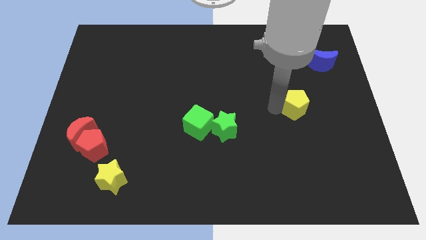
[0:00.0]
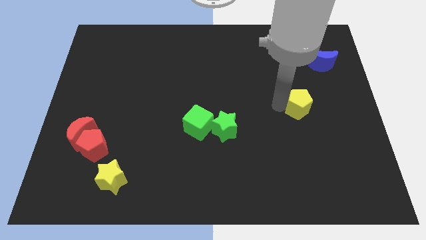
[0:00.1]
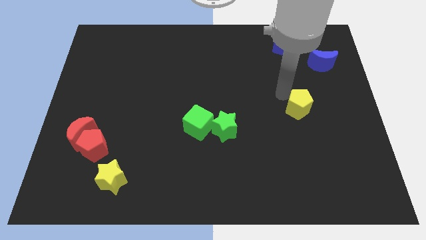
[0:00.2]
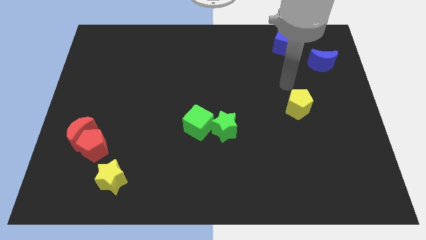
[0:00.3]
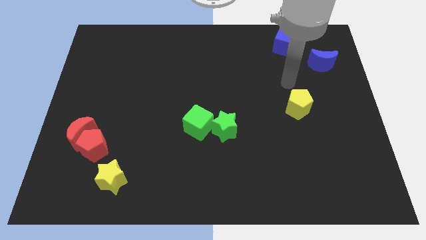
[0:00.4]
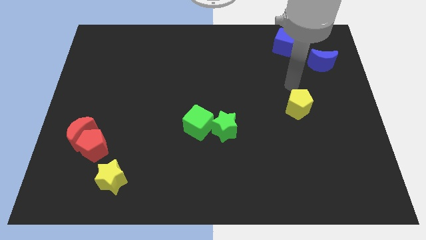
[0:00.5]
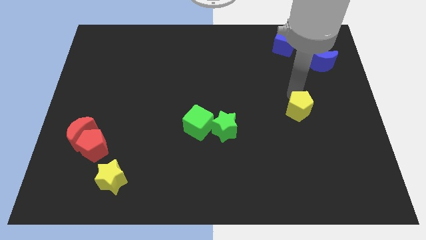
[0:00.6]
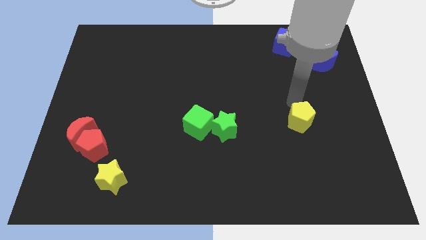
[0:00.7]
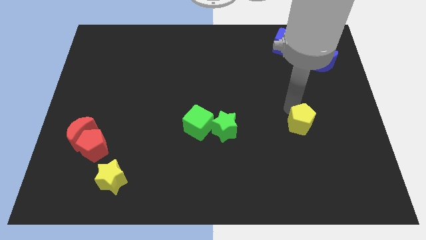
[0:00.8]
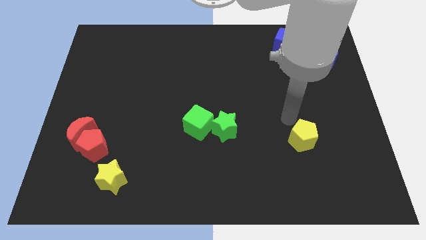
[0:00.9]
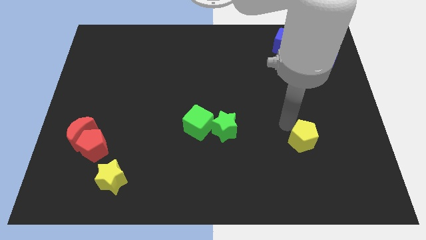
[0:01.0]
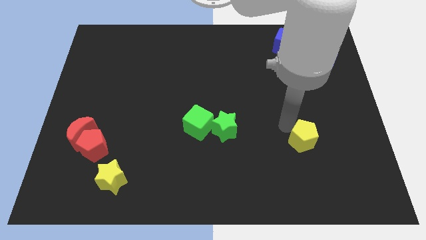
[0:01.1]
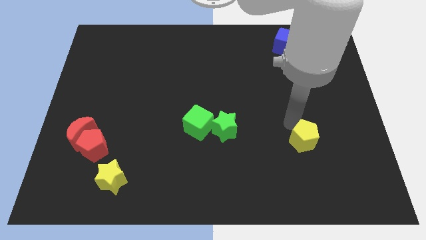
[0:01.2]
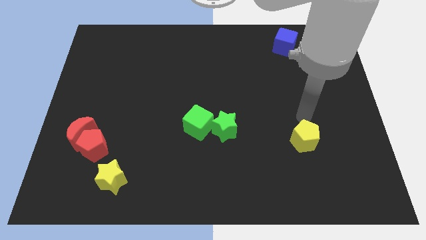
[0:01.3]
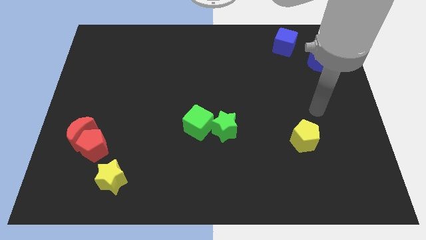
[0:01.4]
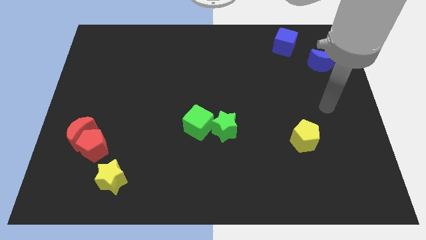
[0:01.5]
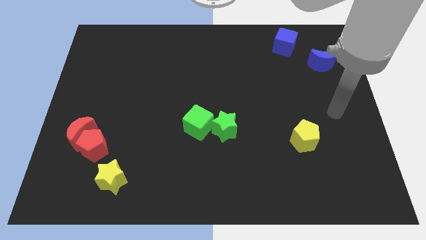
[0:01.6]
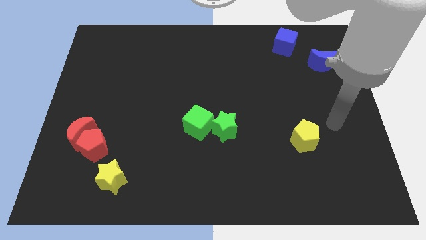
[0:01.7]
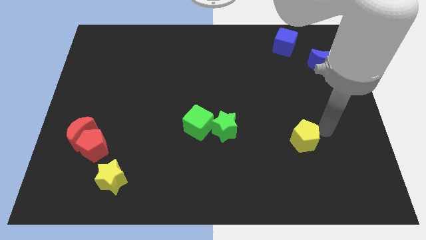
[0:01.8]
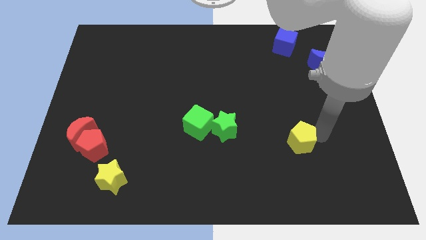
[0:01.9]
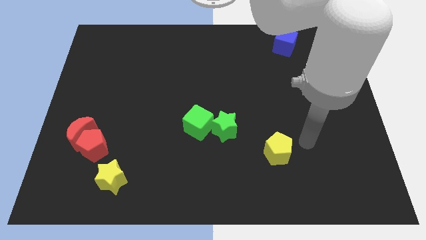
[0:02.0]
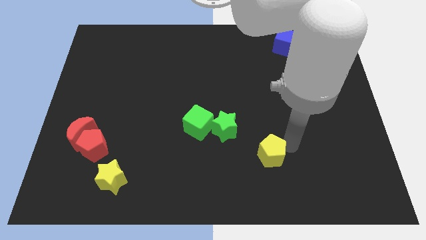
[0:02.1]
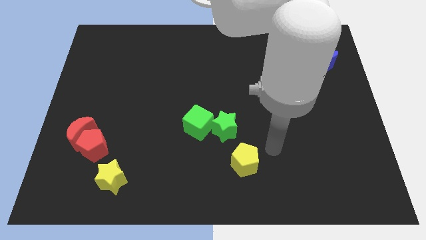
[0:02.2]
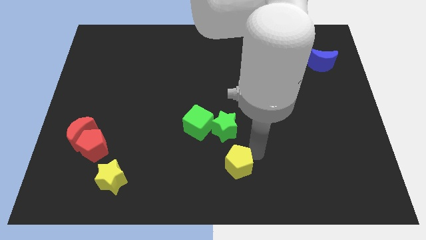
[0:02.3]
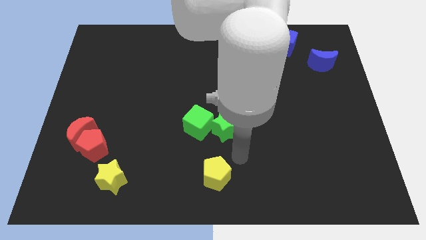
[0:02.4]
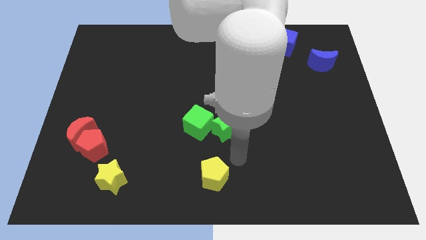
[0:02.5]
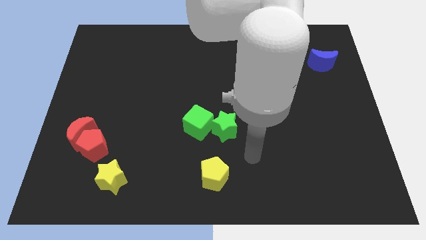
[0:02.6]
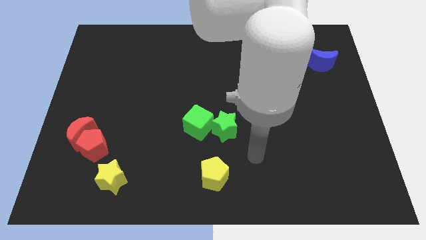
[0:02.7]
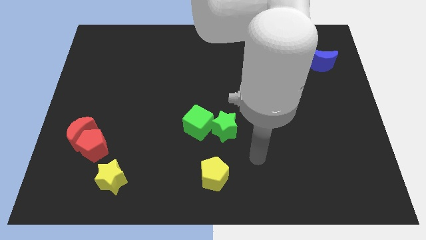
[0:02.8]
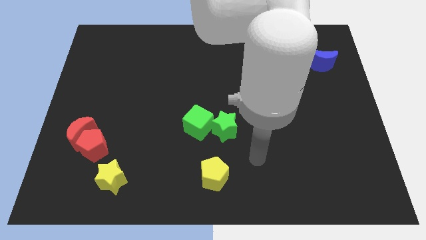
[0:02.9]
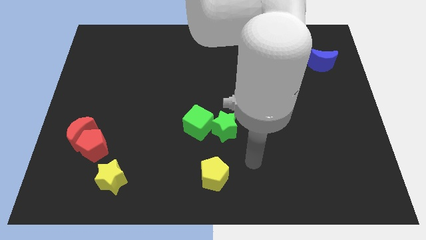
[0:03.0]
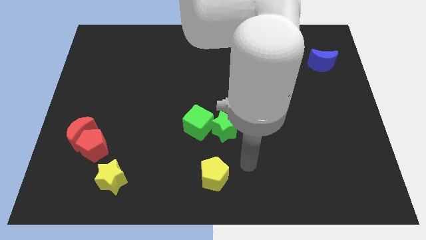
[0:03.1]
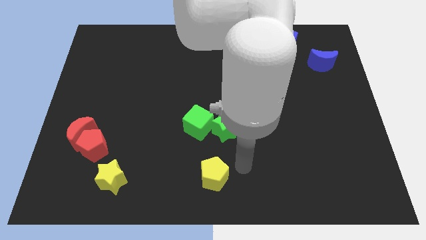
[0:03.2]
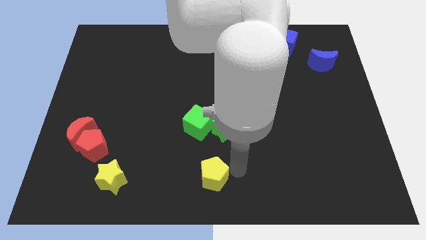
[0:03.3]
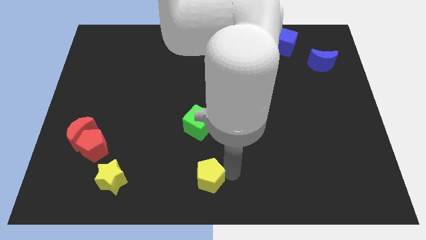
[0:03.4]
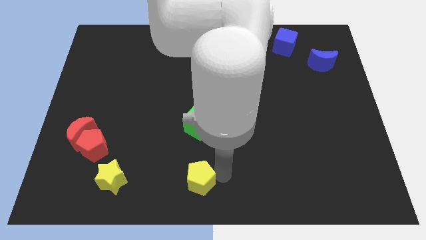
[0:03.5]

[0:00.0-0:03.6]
push yellow pentagon below green cube

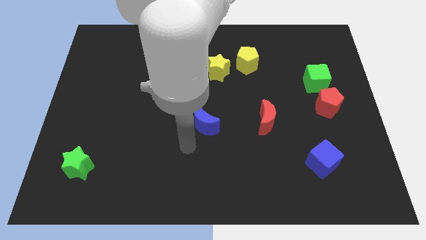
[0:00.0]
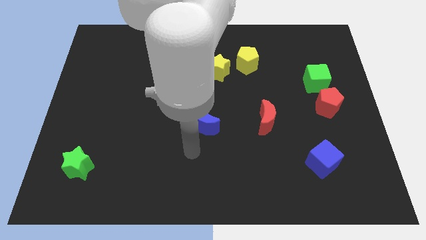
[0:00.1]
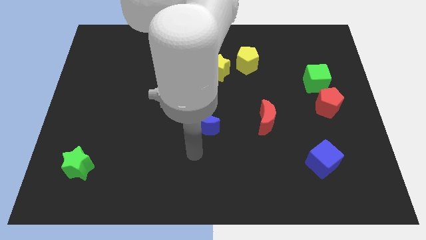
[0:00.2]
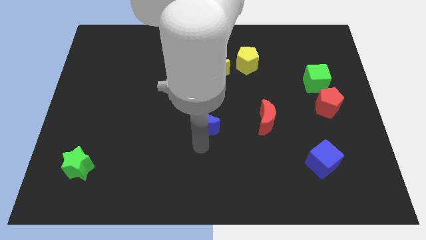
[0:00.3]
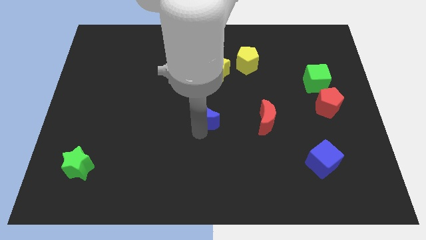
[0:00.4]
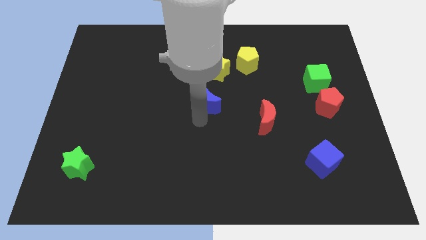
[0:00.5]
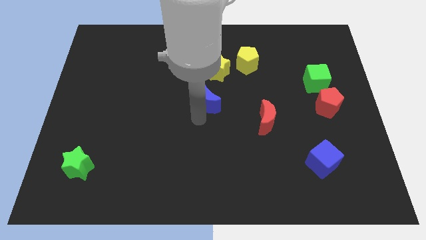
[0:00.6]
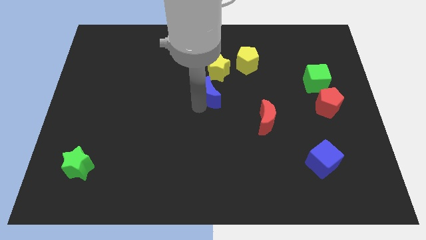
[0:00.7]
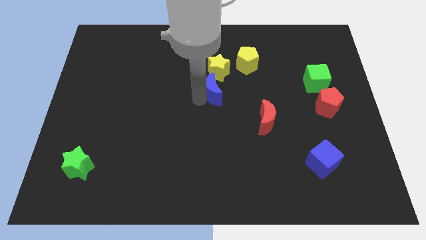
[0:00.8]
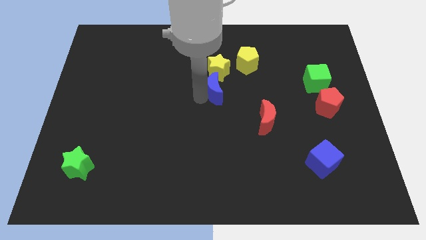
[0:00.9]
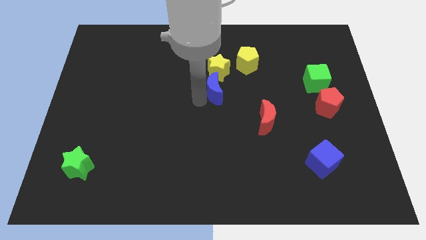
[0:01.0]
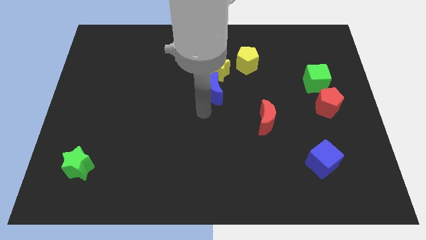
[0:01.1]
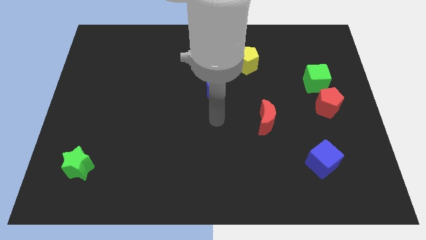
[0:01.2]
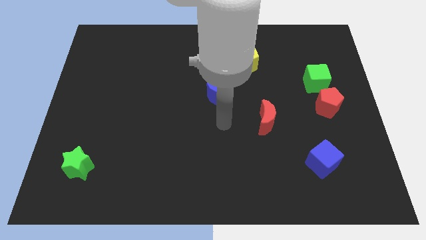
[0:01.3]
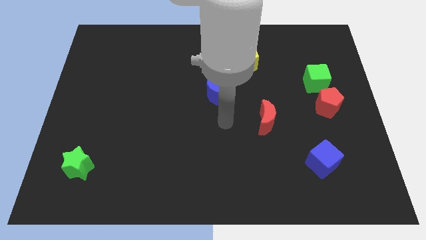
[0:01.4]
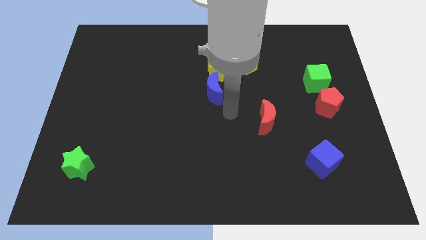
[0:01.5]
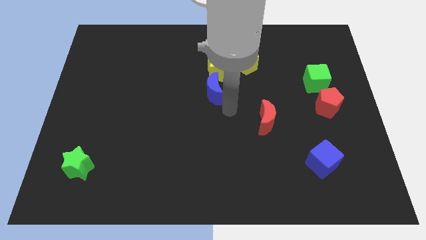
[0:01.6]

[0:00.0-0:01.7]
push the blue crescent to the bottom of the yellow star

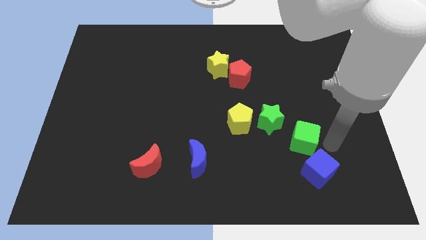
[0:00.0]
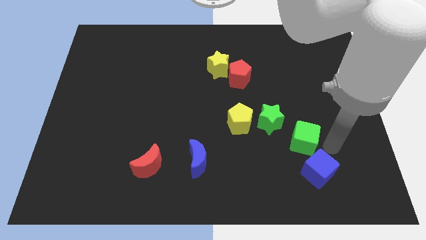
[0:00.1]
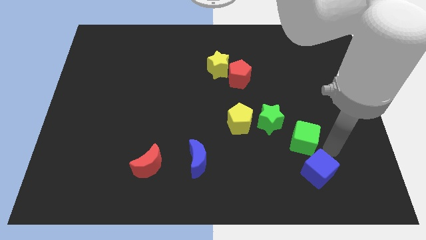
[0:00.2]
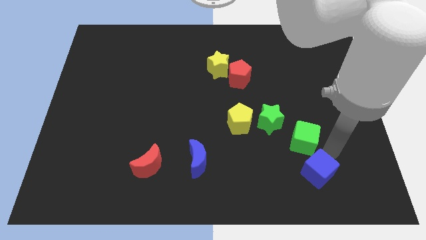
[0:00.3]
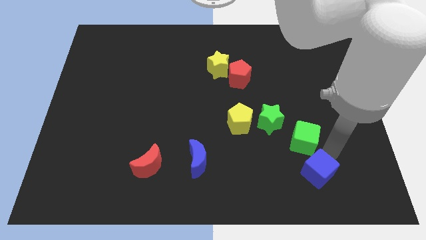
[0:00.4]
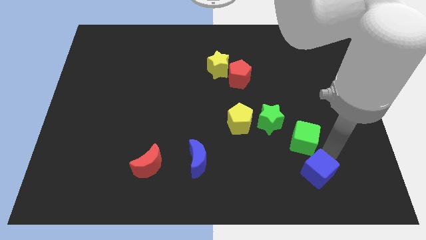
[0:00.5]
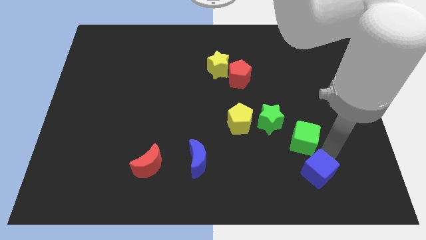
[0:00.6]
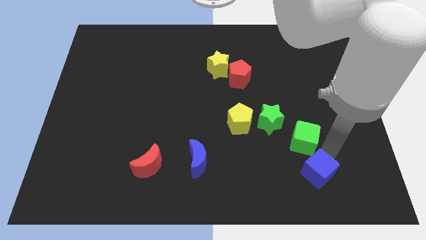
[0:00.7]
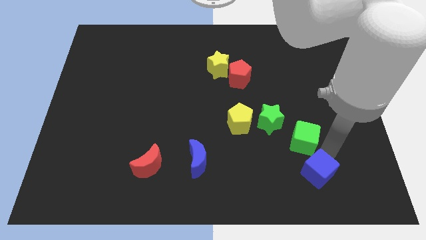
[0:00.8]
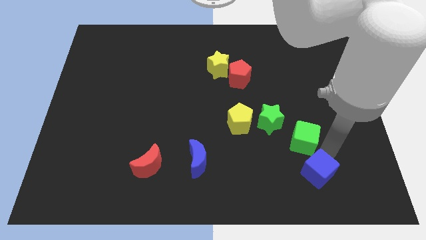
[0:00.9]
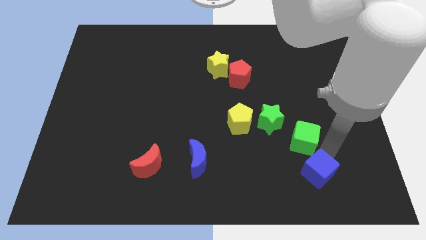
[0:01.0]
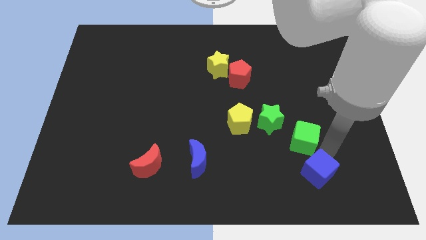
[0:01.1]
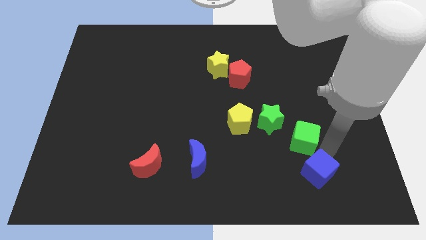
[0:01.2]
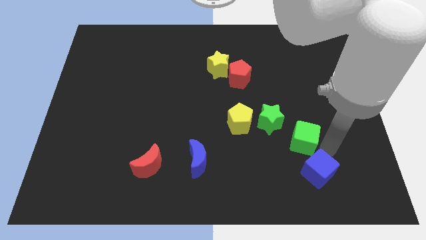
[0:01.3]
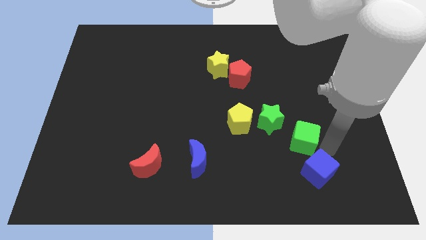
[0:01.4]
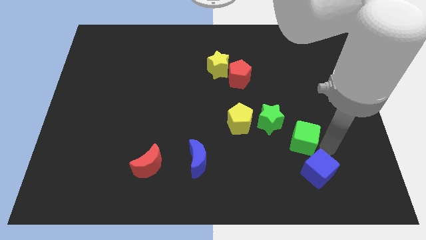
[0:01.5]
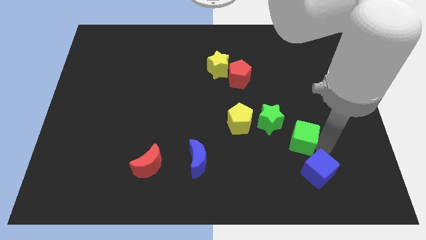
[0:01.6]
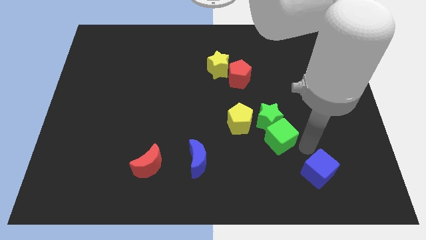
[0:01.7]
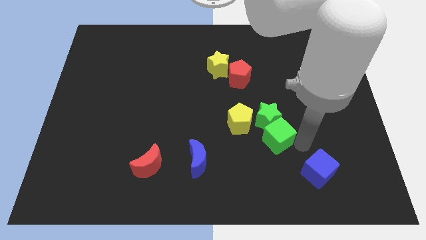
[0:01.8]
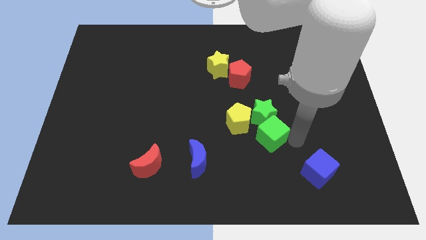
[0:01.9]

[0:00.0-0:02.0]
move the green cube into the bottom right side of the green star

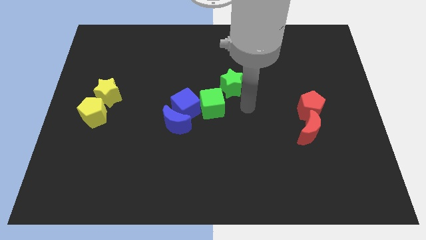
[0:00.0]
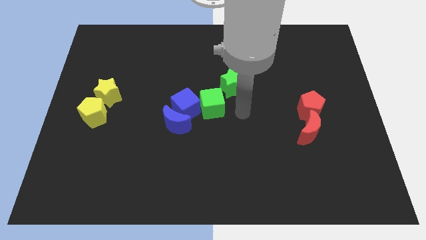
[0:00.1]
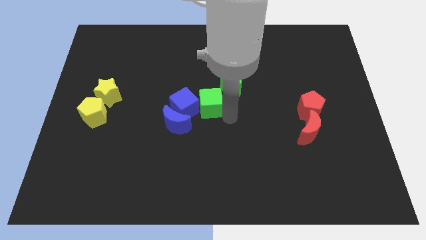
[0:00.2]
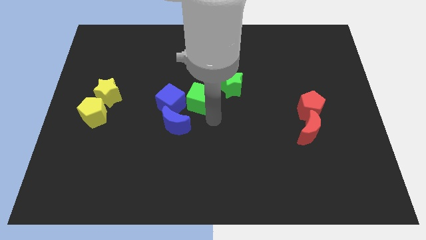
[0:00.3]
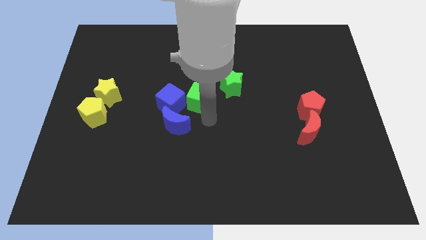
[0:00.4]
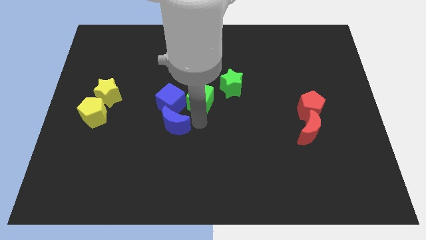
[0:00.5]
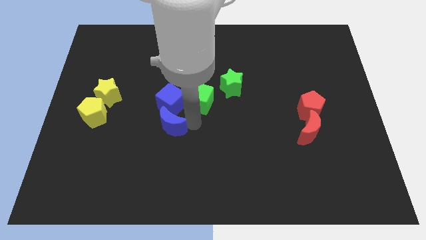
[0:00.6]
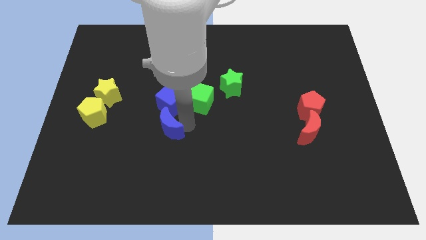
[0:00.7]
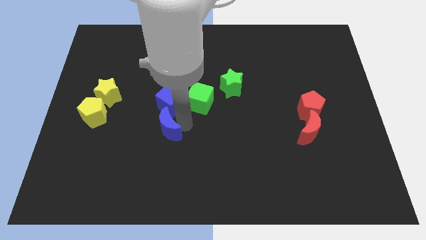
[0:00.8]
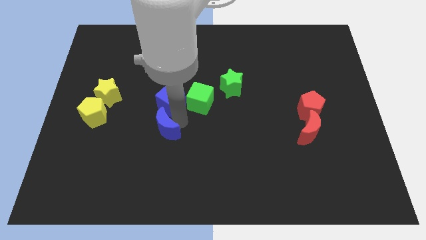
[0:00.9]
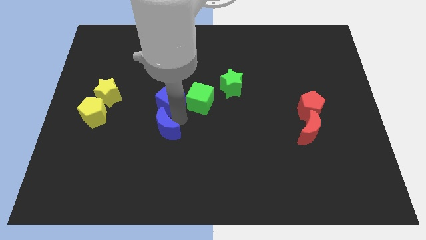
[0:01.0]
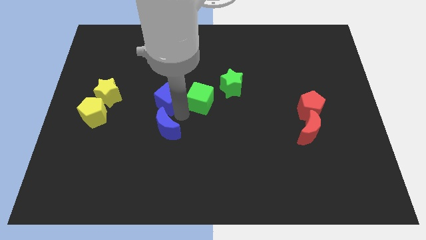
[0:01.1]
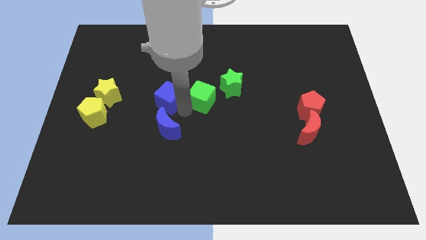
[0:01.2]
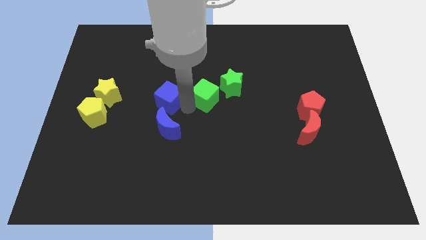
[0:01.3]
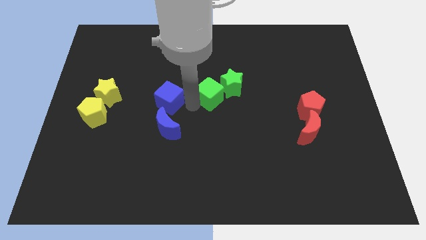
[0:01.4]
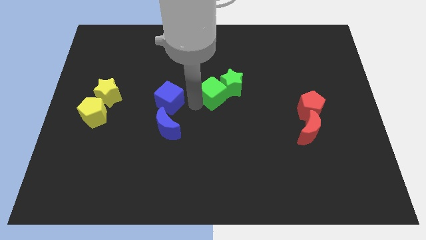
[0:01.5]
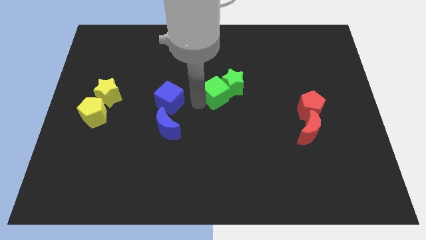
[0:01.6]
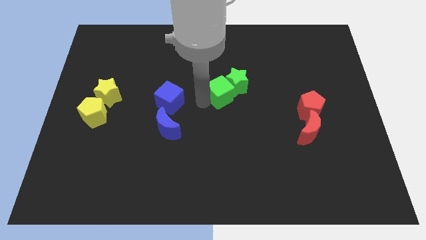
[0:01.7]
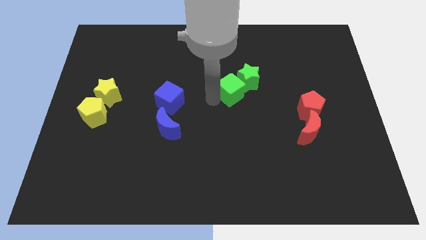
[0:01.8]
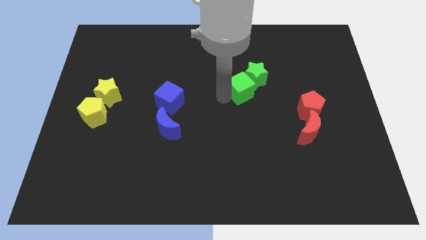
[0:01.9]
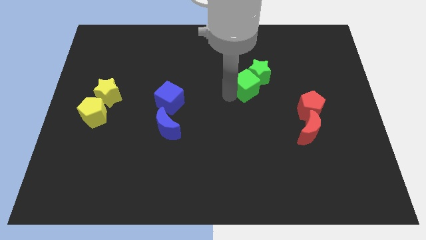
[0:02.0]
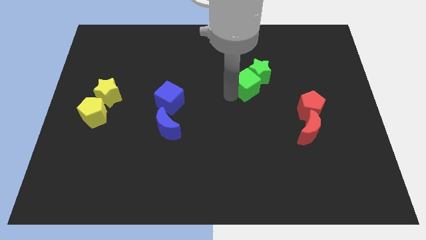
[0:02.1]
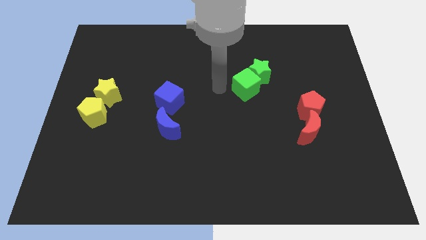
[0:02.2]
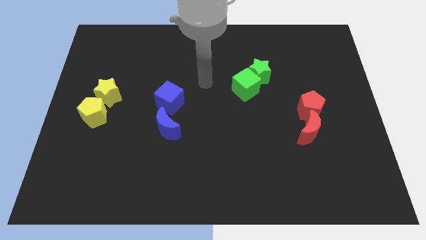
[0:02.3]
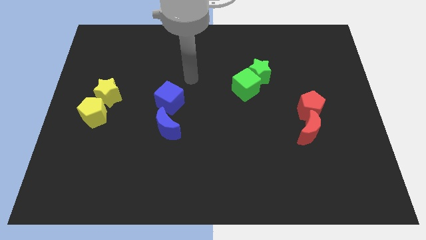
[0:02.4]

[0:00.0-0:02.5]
push the green cube into the green star
